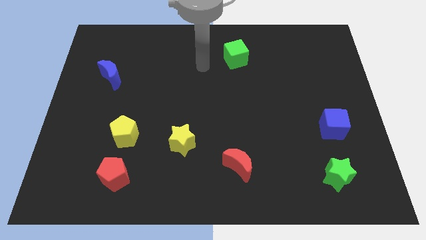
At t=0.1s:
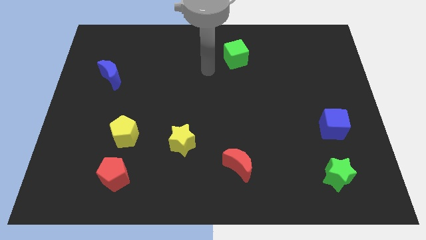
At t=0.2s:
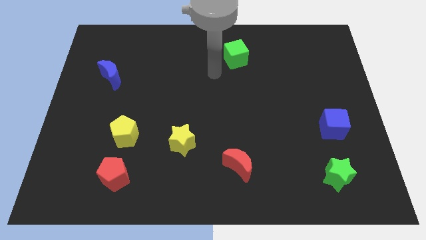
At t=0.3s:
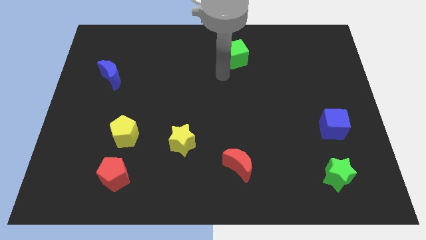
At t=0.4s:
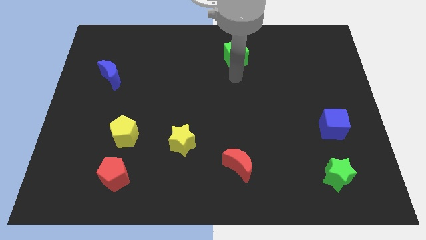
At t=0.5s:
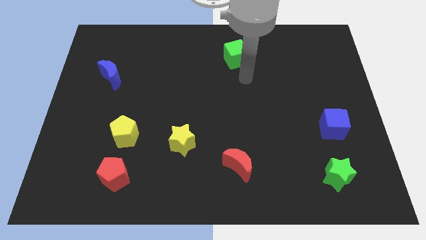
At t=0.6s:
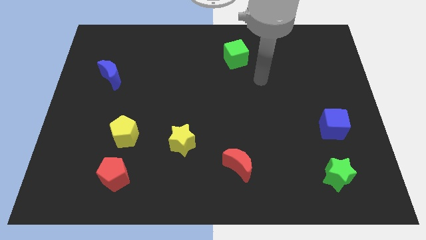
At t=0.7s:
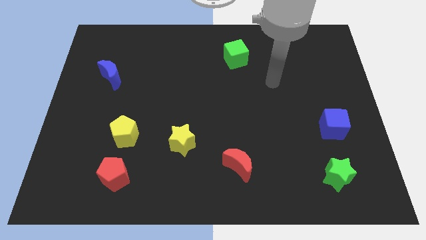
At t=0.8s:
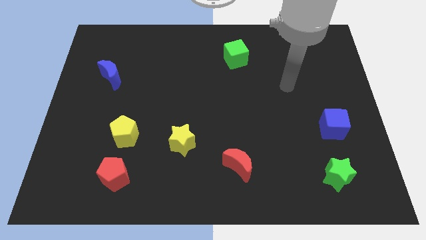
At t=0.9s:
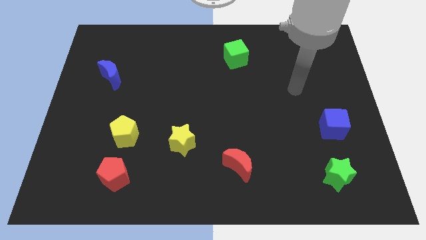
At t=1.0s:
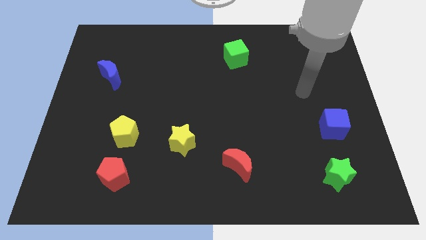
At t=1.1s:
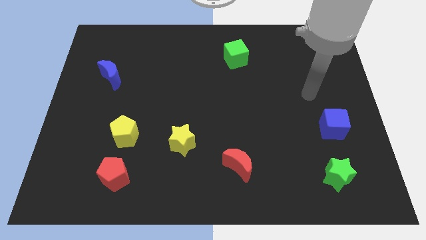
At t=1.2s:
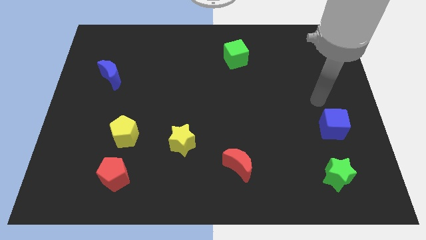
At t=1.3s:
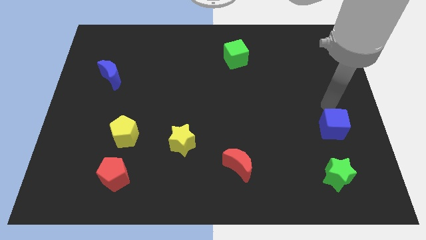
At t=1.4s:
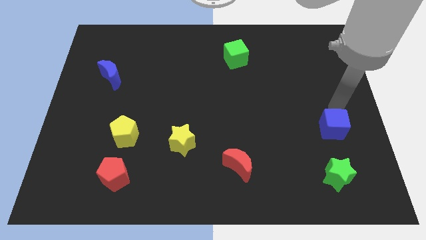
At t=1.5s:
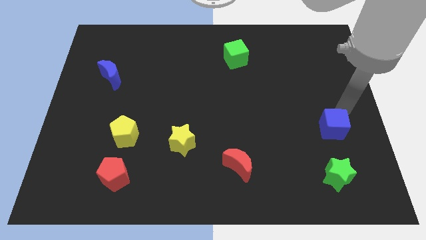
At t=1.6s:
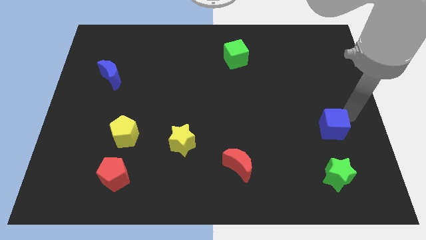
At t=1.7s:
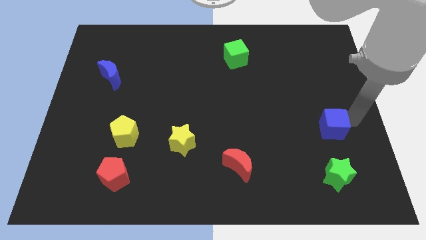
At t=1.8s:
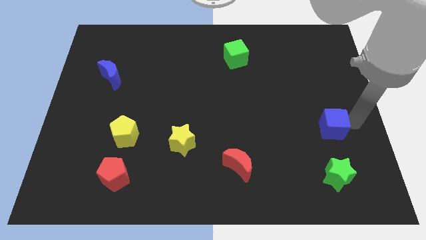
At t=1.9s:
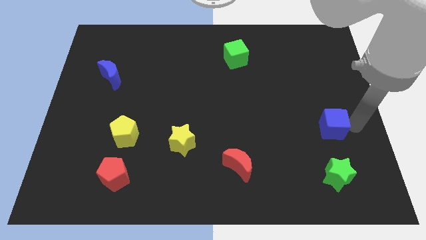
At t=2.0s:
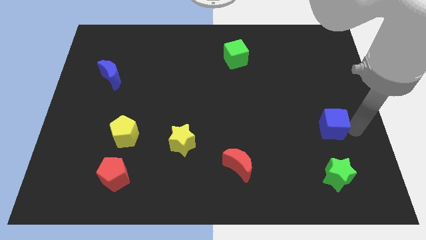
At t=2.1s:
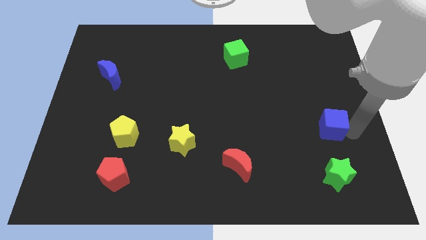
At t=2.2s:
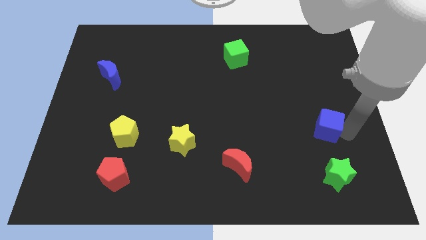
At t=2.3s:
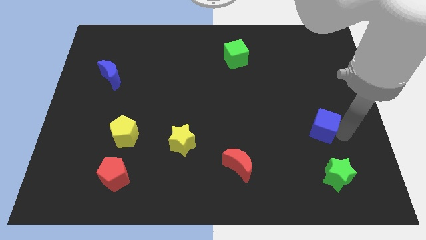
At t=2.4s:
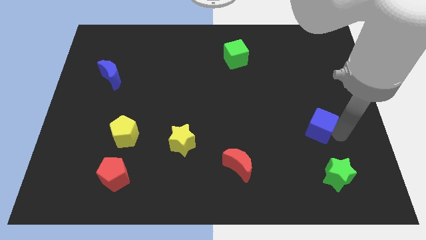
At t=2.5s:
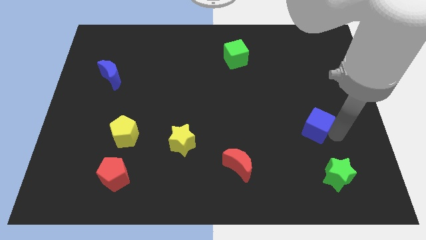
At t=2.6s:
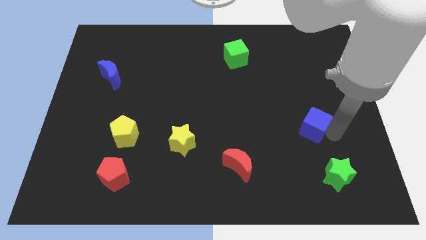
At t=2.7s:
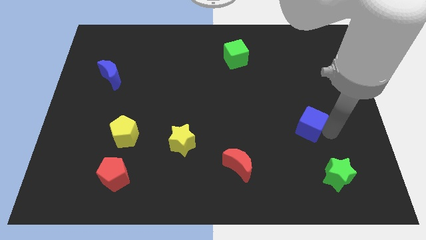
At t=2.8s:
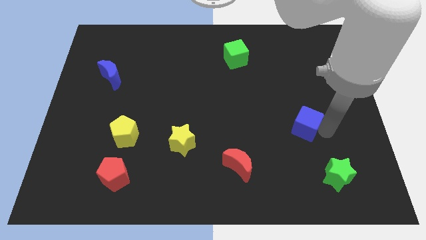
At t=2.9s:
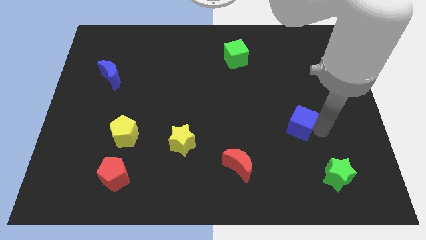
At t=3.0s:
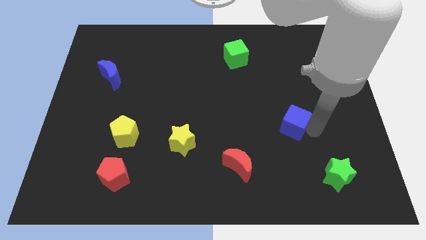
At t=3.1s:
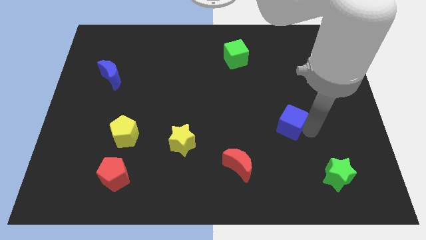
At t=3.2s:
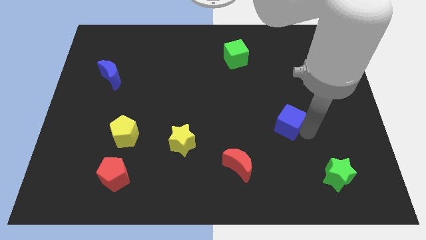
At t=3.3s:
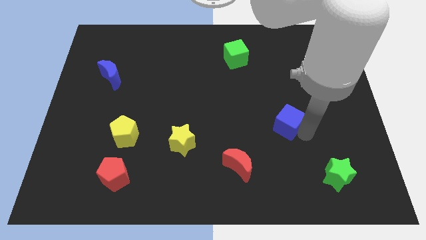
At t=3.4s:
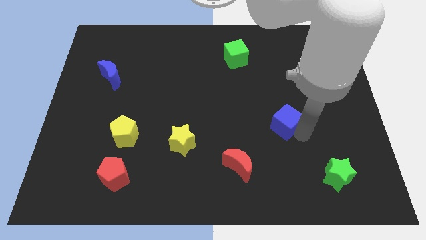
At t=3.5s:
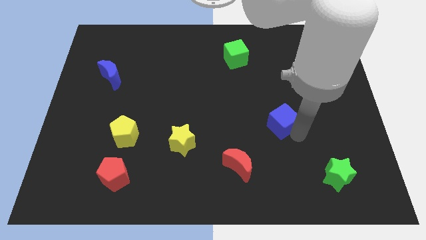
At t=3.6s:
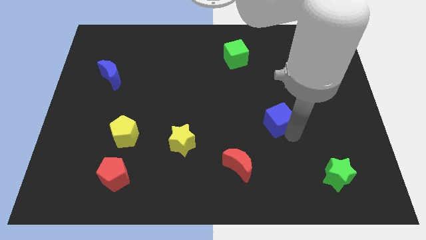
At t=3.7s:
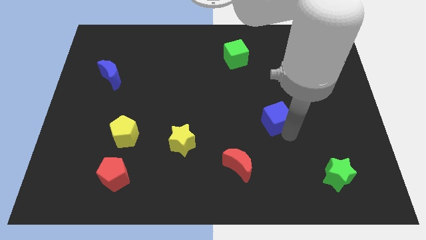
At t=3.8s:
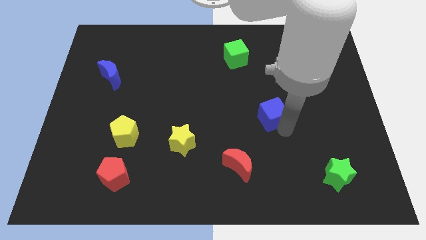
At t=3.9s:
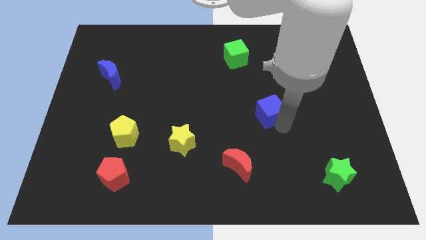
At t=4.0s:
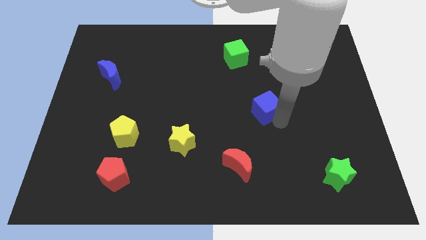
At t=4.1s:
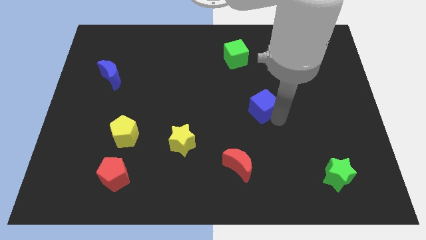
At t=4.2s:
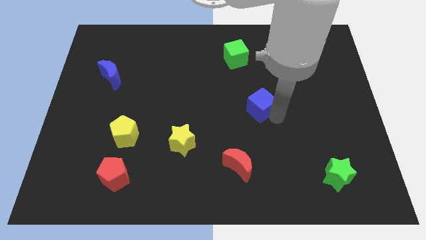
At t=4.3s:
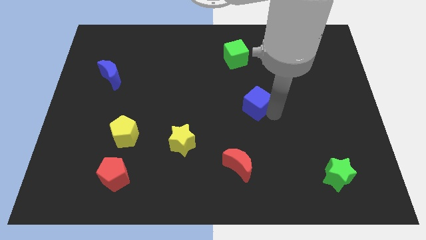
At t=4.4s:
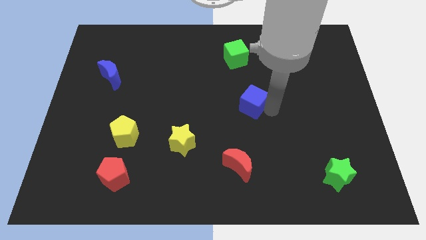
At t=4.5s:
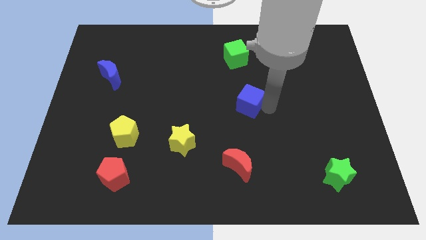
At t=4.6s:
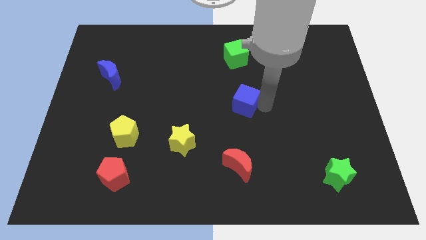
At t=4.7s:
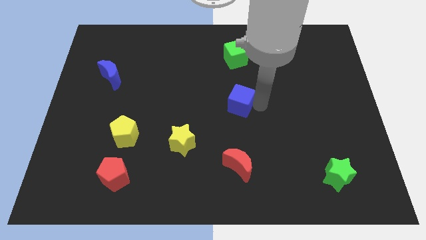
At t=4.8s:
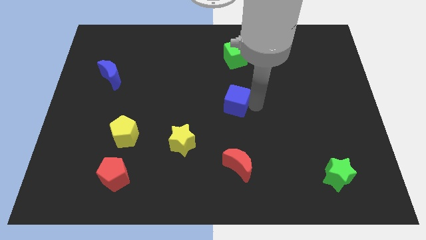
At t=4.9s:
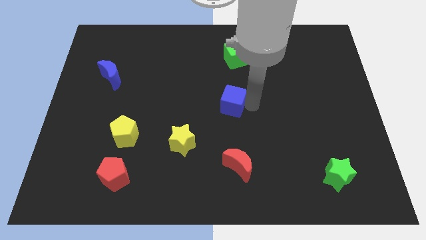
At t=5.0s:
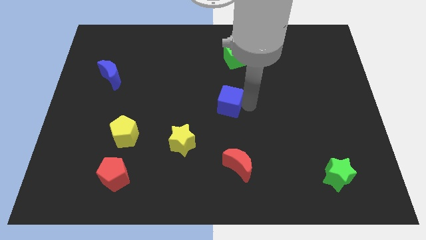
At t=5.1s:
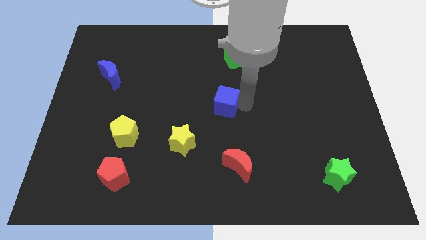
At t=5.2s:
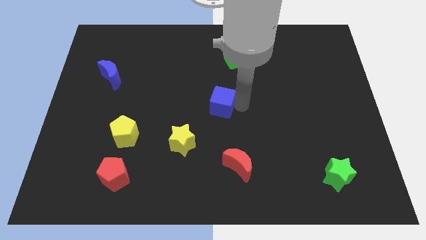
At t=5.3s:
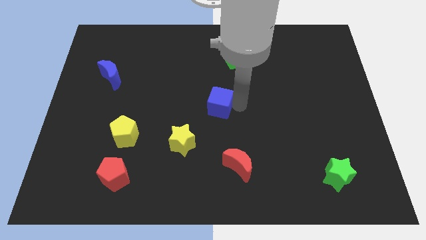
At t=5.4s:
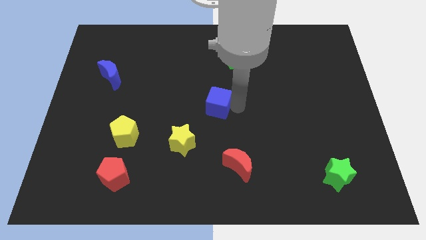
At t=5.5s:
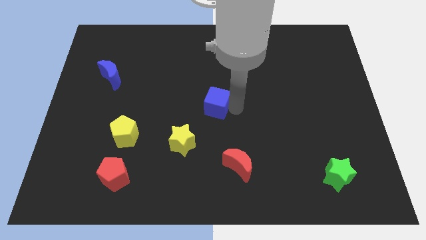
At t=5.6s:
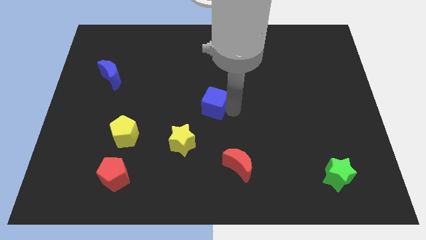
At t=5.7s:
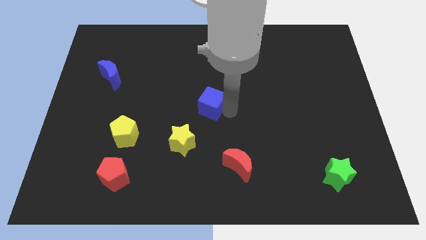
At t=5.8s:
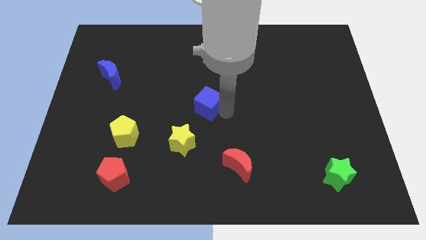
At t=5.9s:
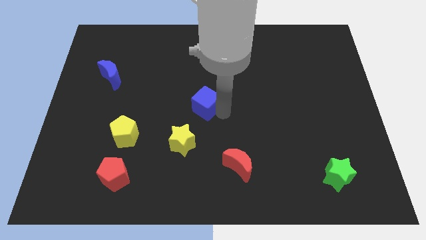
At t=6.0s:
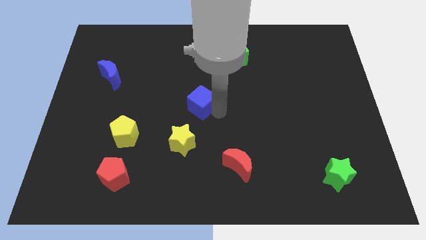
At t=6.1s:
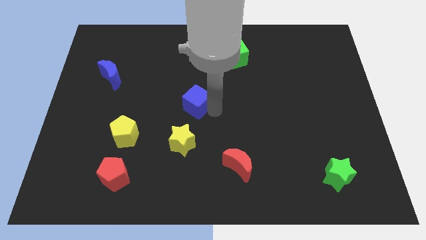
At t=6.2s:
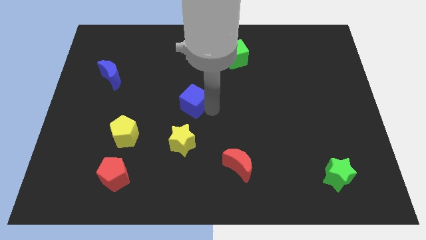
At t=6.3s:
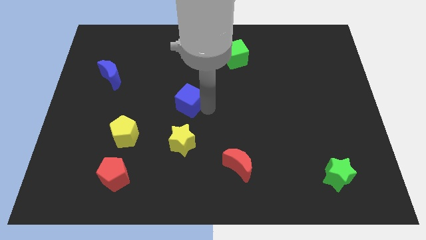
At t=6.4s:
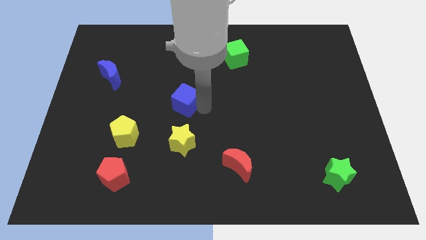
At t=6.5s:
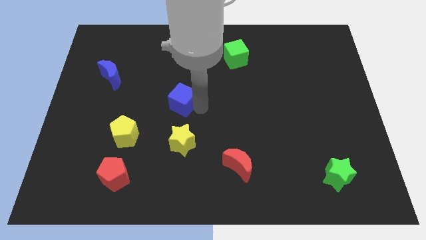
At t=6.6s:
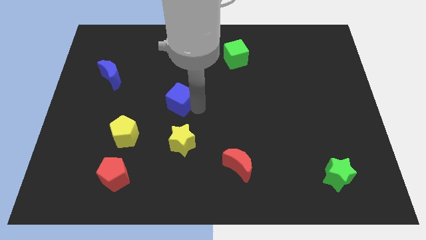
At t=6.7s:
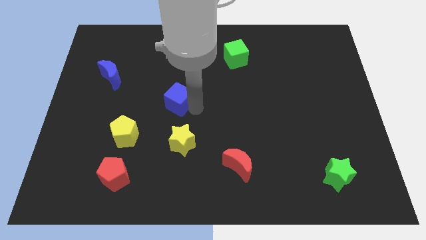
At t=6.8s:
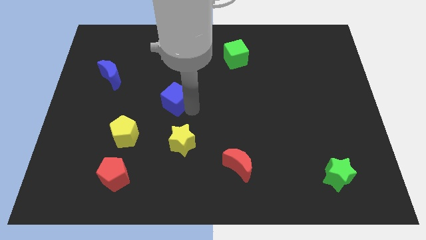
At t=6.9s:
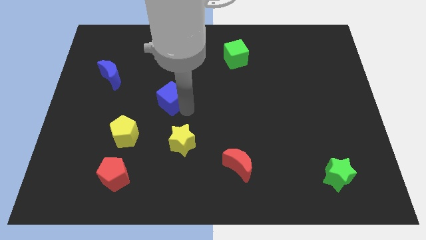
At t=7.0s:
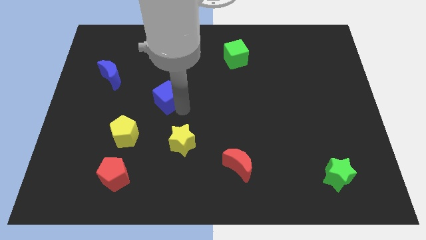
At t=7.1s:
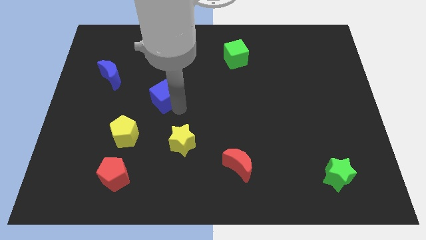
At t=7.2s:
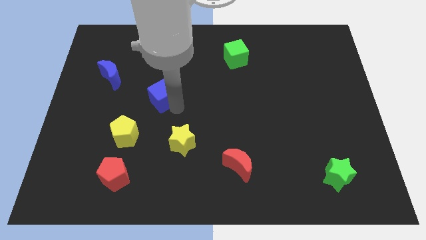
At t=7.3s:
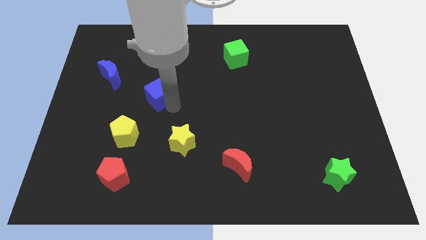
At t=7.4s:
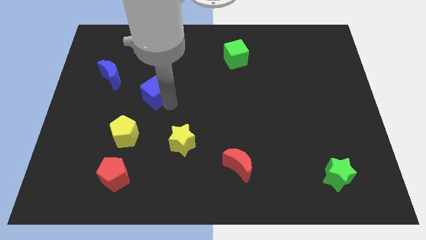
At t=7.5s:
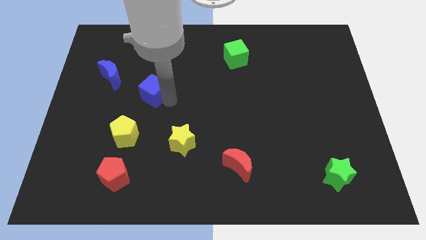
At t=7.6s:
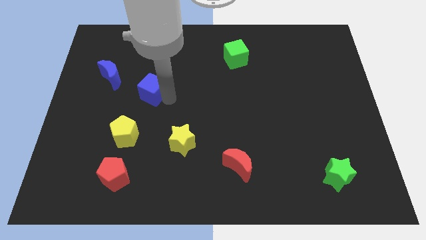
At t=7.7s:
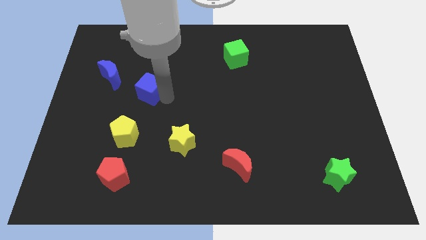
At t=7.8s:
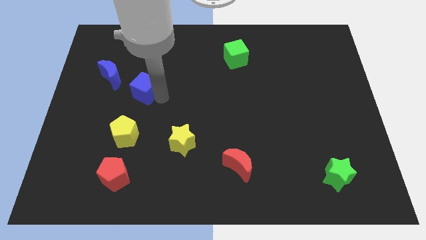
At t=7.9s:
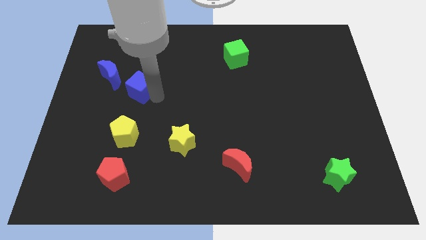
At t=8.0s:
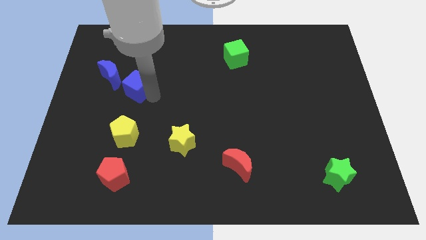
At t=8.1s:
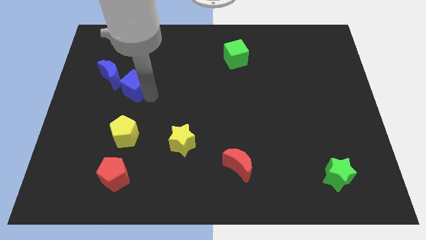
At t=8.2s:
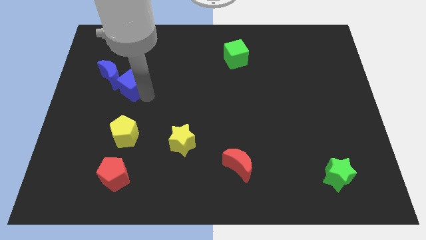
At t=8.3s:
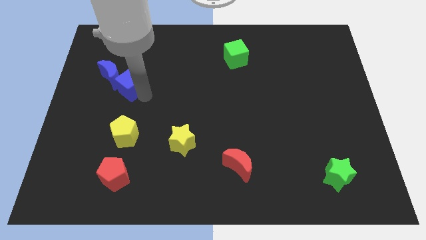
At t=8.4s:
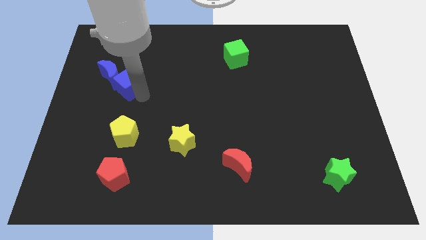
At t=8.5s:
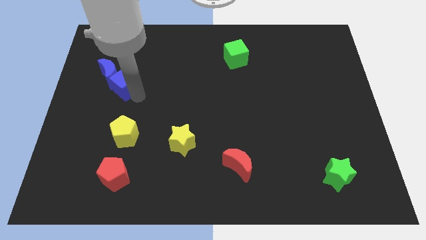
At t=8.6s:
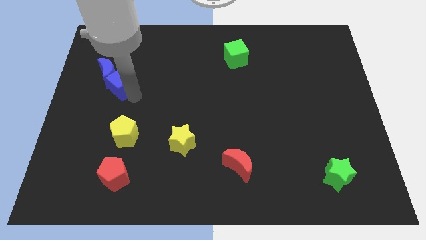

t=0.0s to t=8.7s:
push the blue cube towards the blue moon
